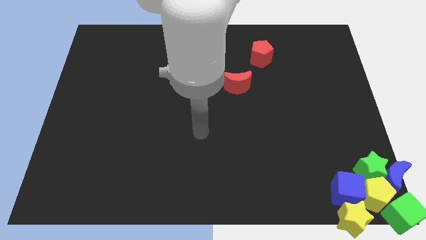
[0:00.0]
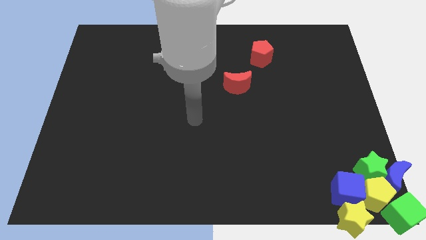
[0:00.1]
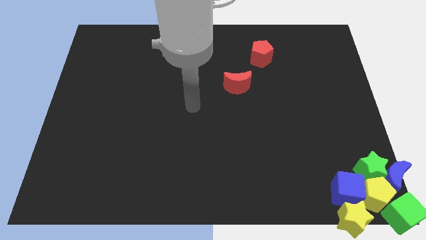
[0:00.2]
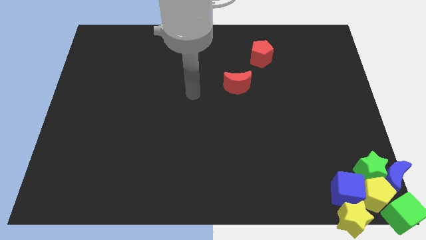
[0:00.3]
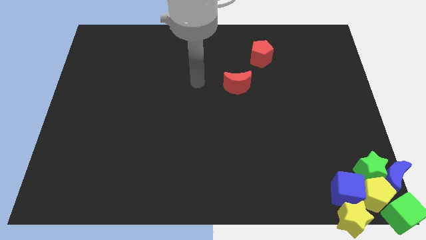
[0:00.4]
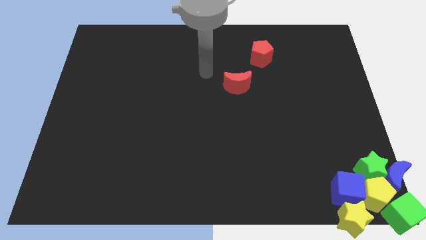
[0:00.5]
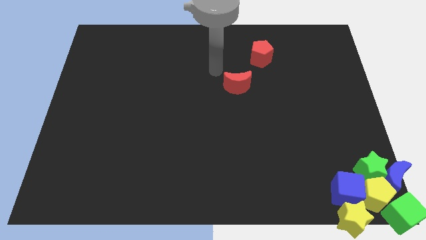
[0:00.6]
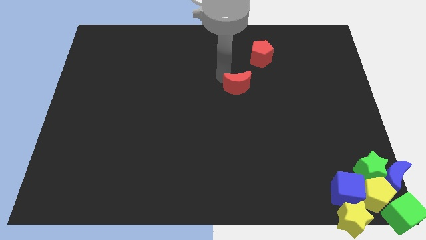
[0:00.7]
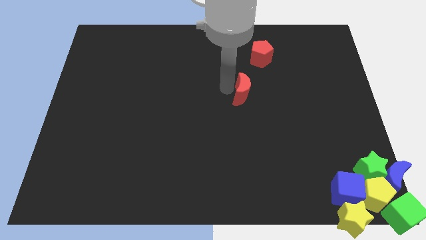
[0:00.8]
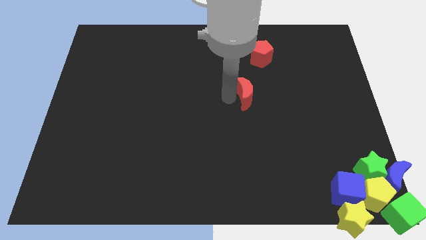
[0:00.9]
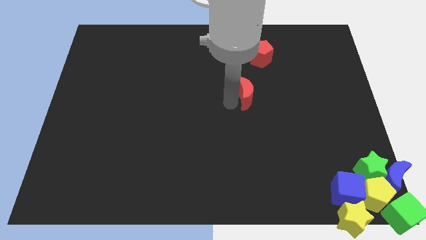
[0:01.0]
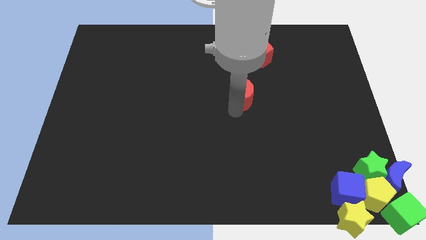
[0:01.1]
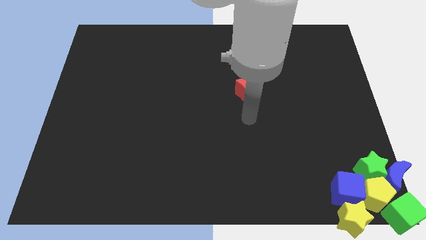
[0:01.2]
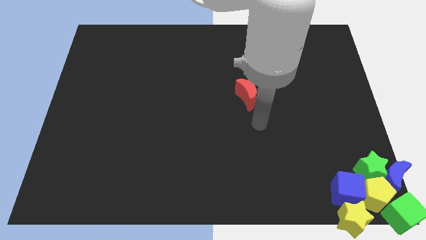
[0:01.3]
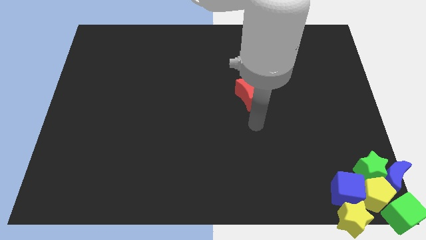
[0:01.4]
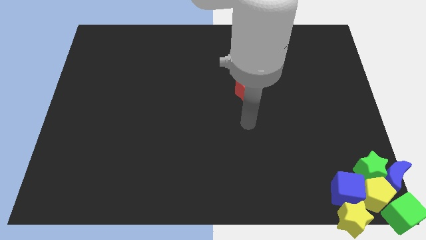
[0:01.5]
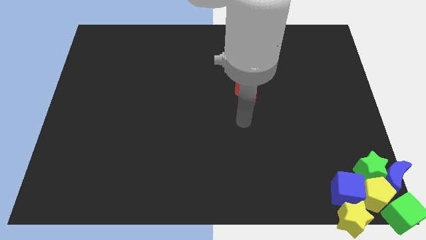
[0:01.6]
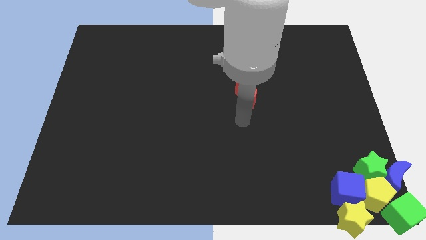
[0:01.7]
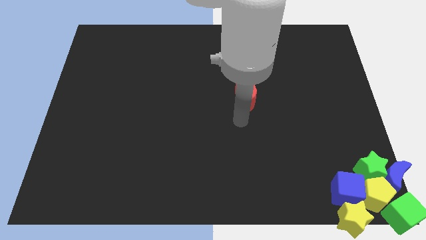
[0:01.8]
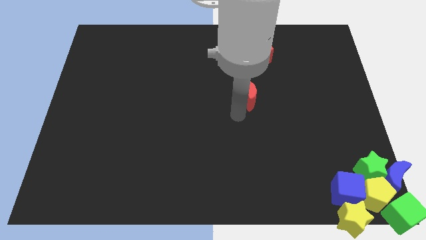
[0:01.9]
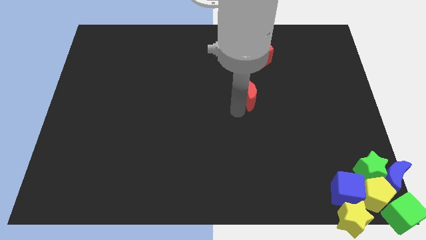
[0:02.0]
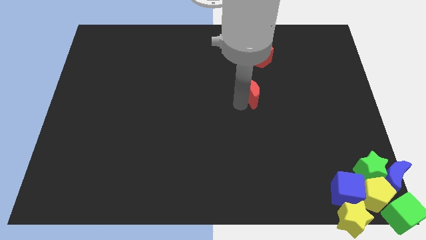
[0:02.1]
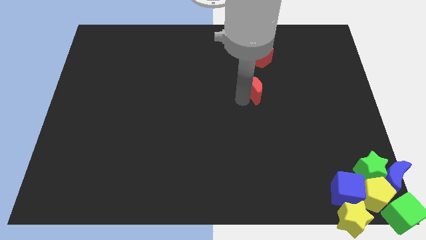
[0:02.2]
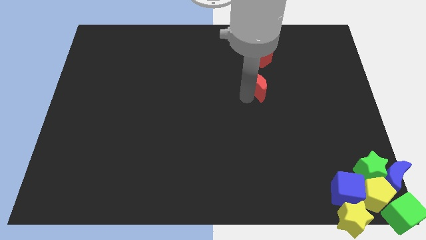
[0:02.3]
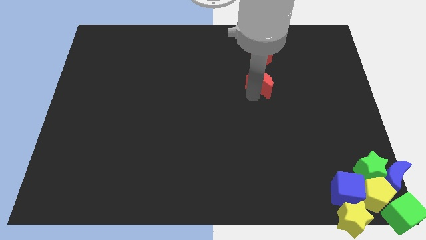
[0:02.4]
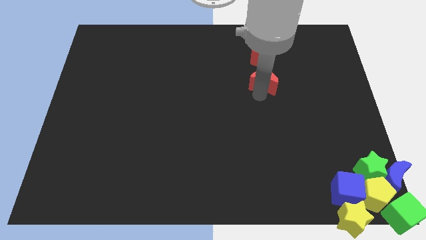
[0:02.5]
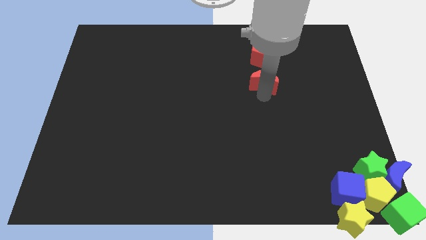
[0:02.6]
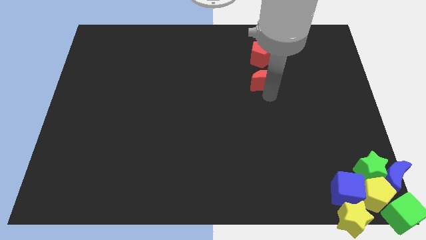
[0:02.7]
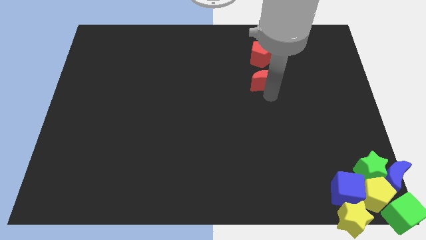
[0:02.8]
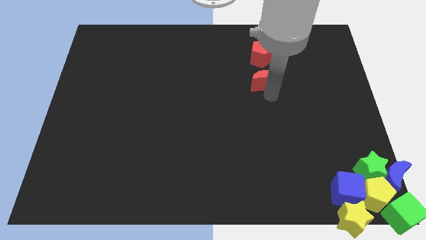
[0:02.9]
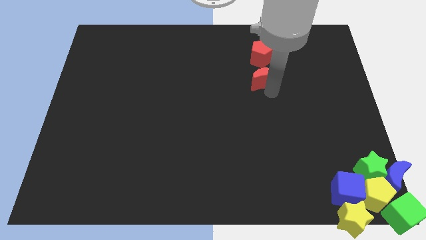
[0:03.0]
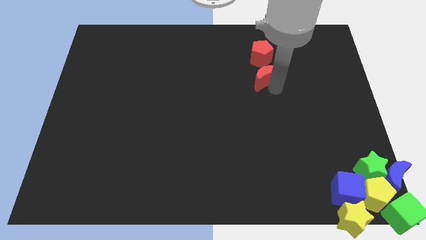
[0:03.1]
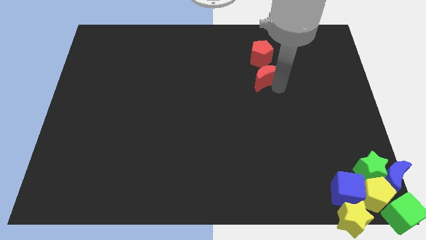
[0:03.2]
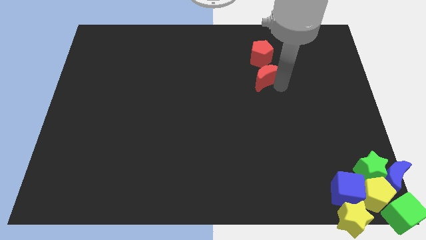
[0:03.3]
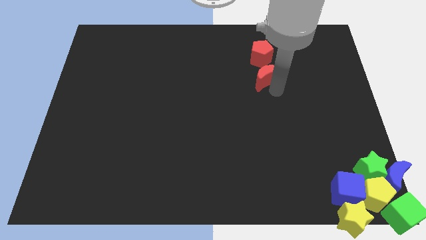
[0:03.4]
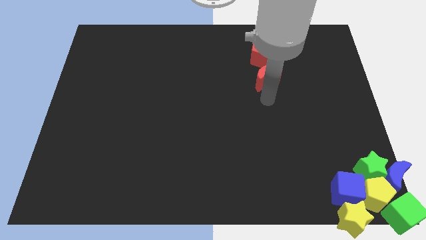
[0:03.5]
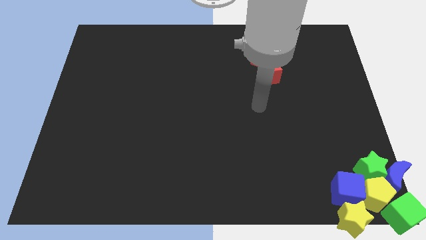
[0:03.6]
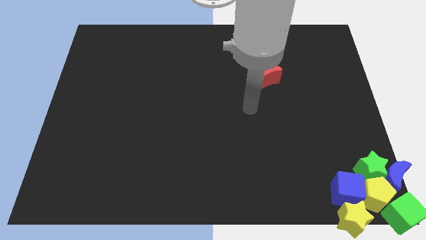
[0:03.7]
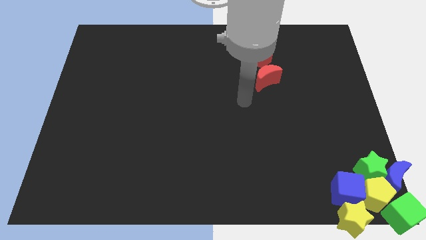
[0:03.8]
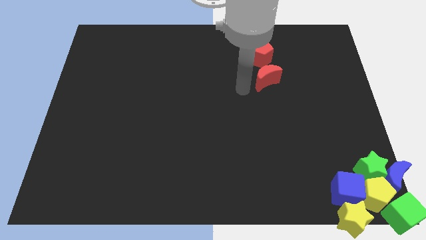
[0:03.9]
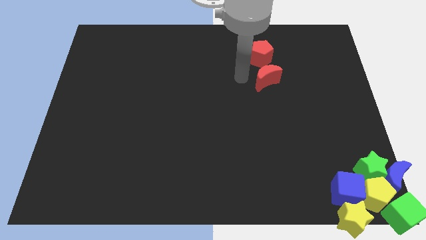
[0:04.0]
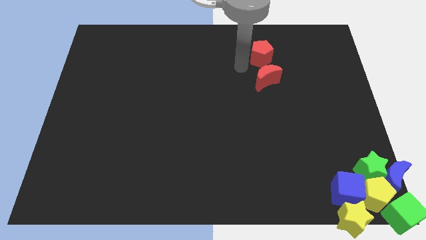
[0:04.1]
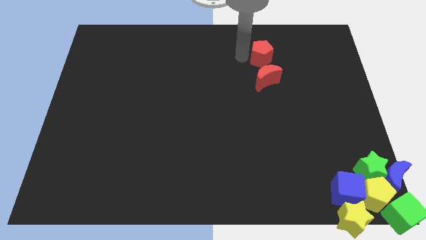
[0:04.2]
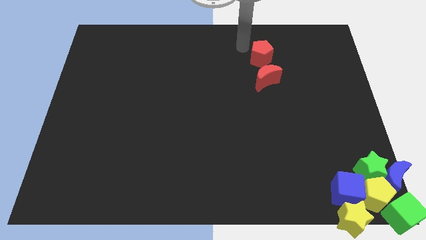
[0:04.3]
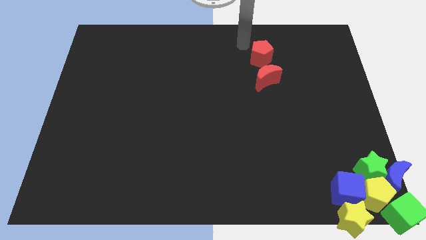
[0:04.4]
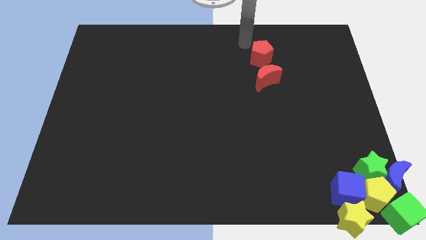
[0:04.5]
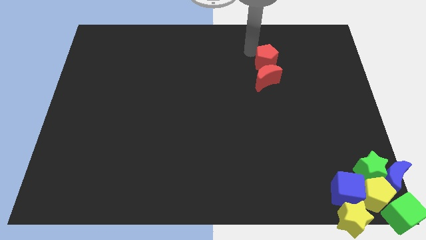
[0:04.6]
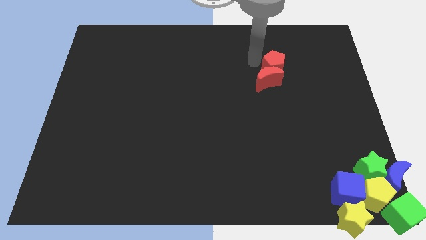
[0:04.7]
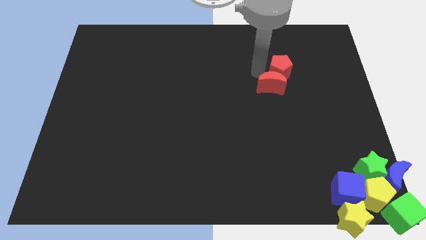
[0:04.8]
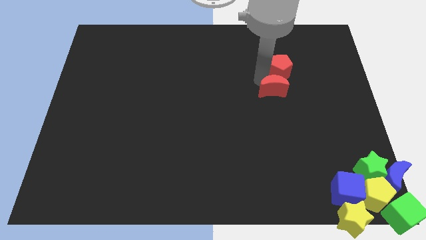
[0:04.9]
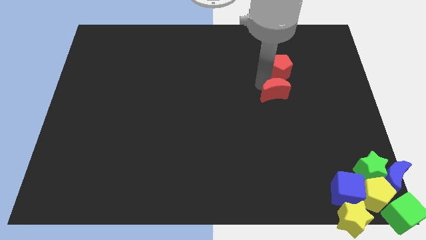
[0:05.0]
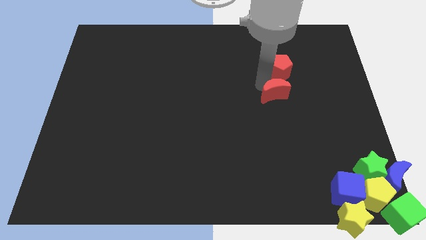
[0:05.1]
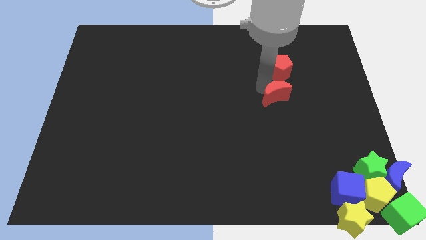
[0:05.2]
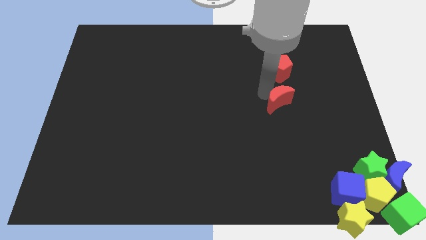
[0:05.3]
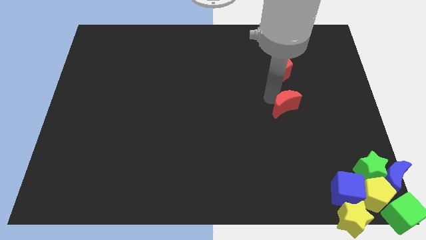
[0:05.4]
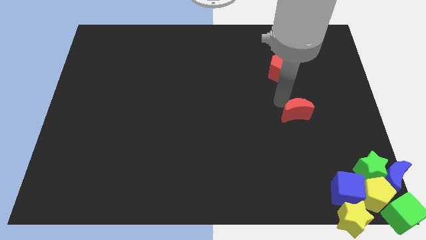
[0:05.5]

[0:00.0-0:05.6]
push the red crescent to the bottom of the board

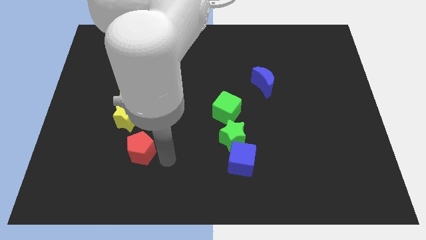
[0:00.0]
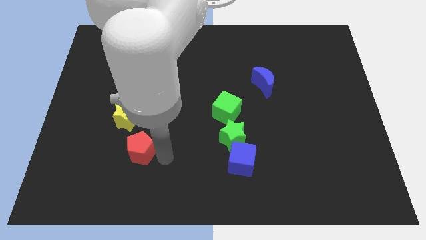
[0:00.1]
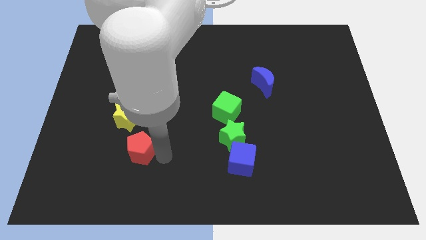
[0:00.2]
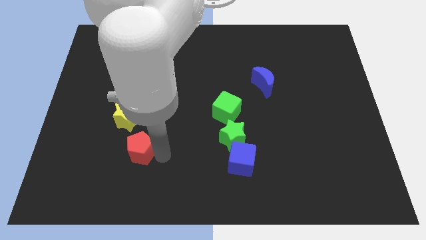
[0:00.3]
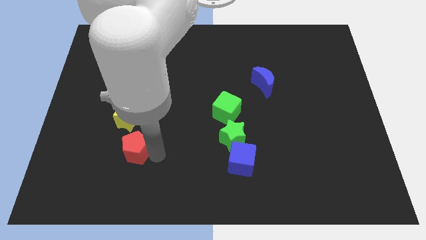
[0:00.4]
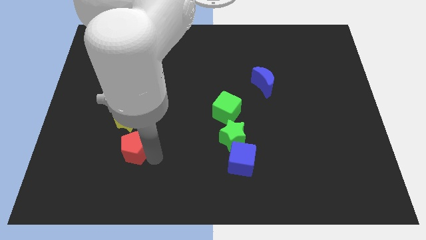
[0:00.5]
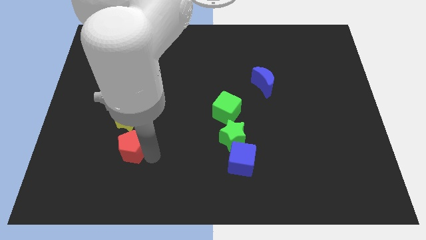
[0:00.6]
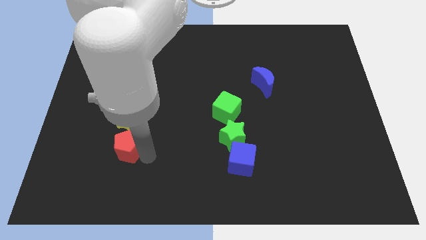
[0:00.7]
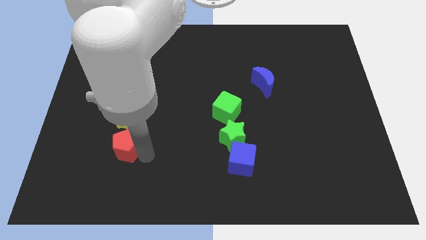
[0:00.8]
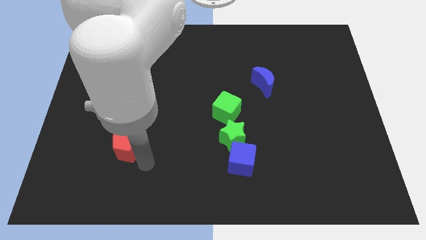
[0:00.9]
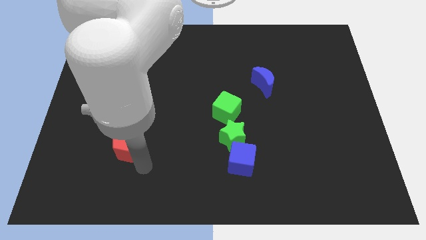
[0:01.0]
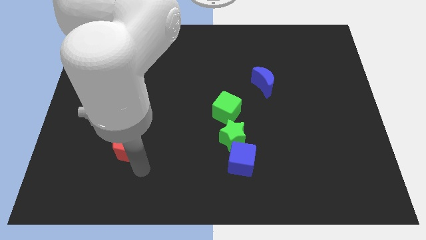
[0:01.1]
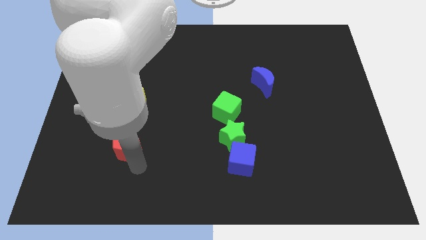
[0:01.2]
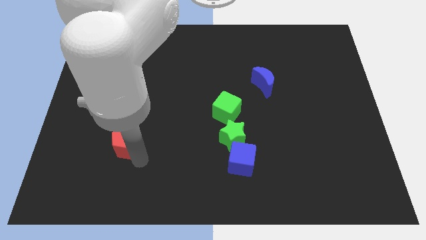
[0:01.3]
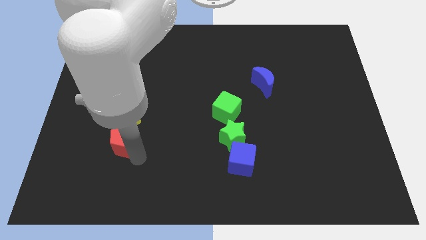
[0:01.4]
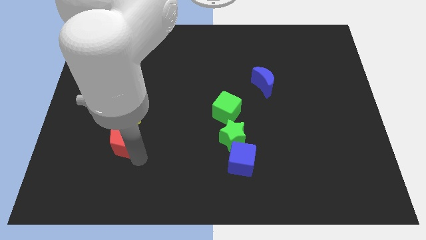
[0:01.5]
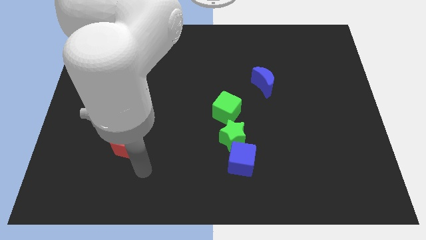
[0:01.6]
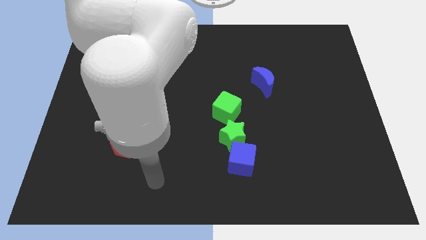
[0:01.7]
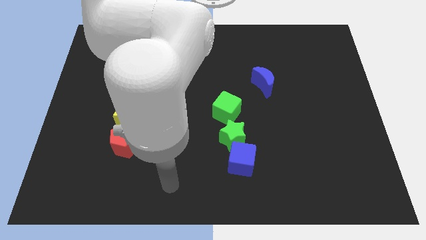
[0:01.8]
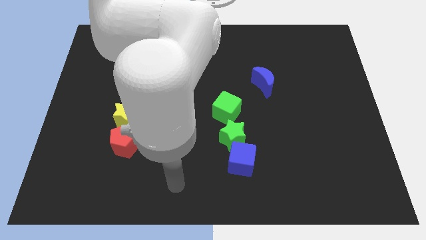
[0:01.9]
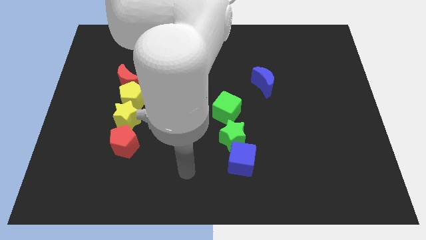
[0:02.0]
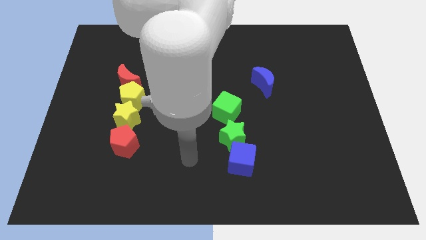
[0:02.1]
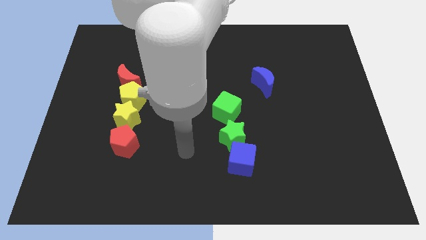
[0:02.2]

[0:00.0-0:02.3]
place the red pentagon below the yellow star

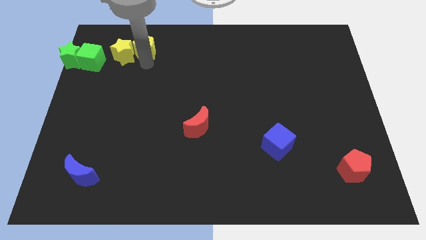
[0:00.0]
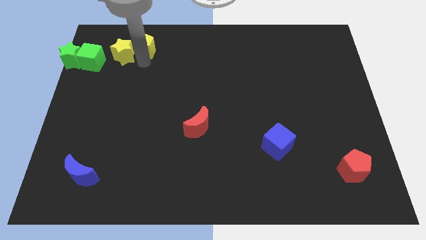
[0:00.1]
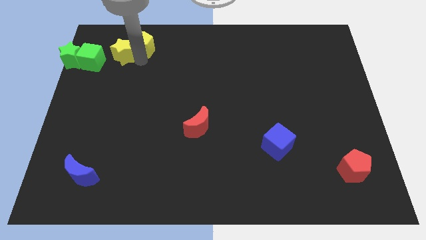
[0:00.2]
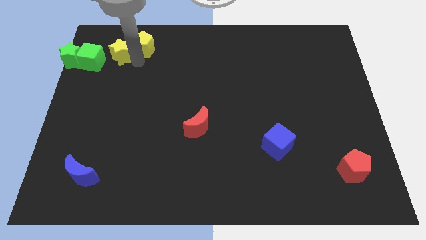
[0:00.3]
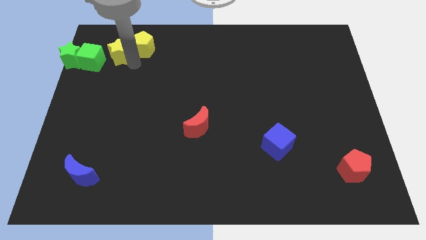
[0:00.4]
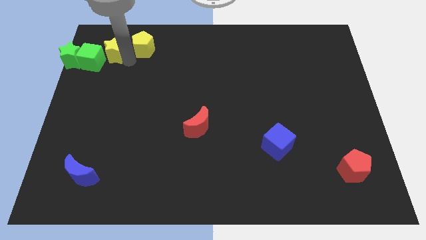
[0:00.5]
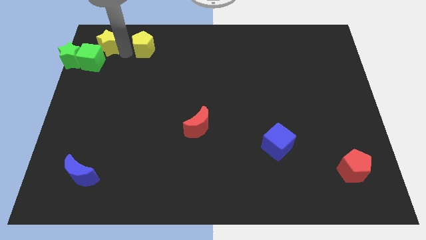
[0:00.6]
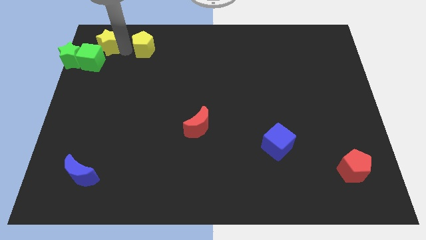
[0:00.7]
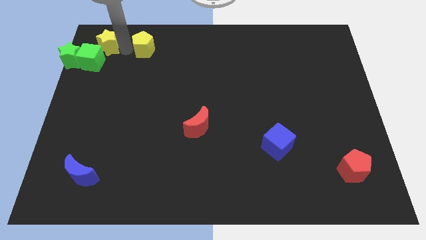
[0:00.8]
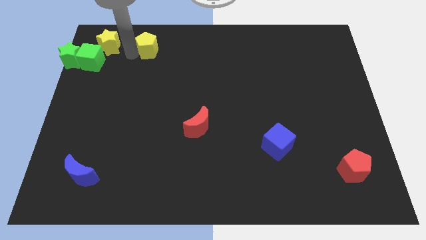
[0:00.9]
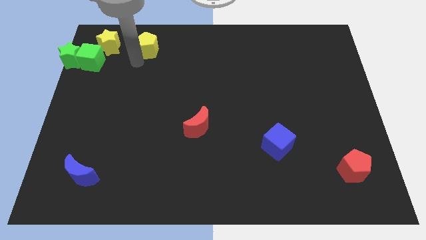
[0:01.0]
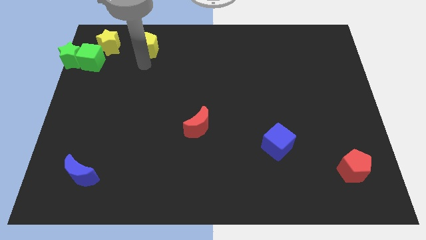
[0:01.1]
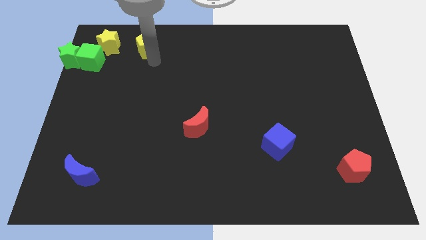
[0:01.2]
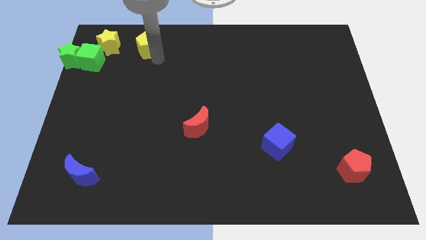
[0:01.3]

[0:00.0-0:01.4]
move the yellow star to the top right side of the green cube
